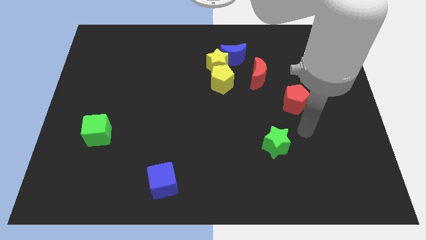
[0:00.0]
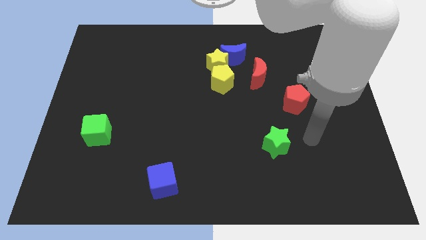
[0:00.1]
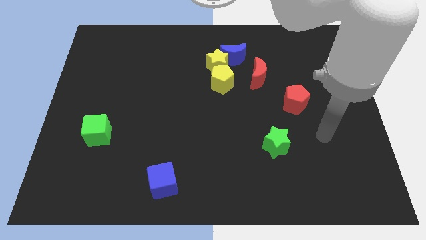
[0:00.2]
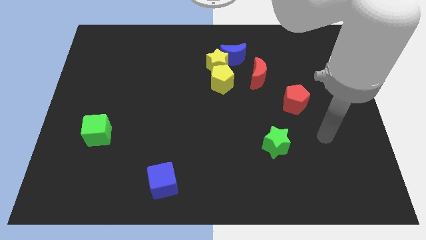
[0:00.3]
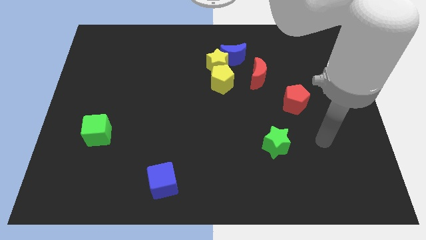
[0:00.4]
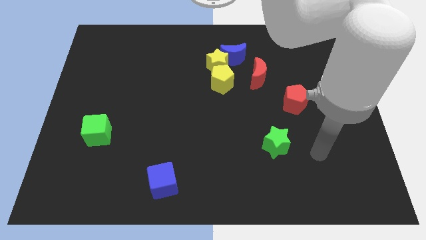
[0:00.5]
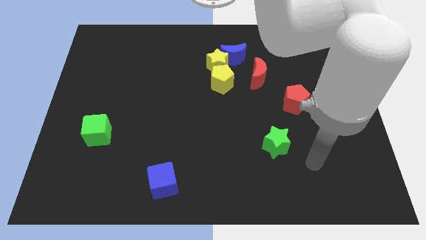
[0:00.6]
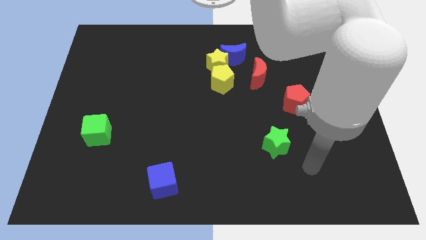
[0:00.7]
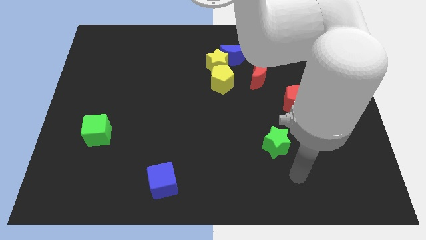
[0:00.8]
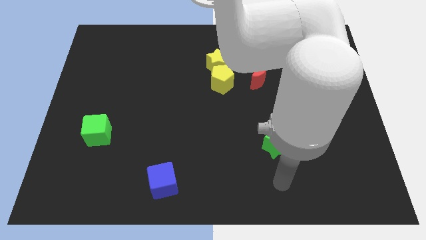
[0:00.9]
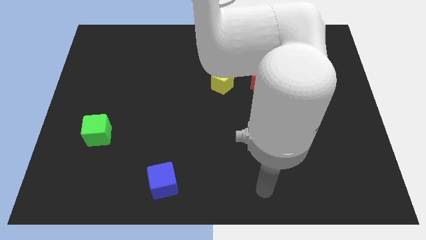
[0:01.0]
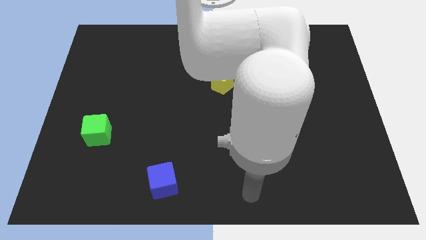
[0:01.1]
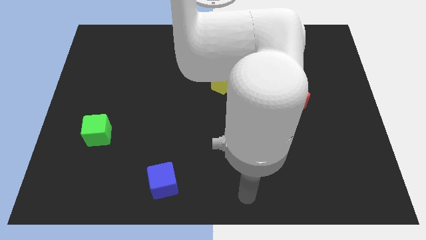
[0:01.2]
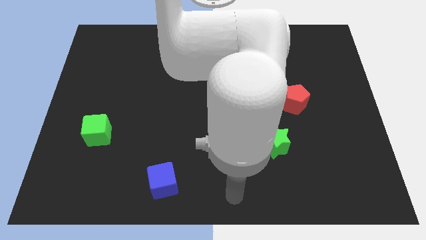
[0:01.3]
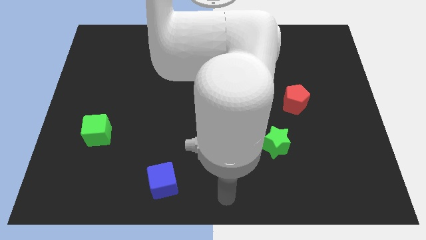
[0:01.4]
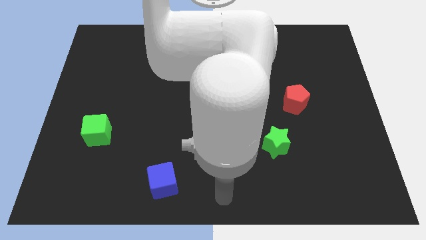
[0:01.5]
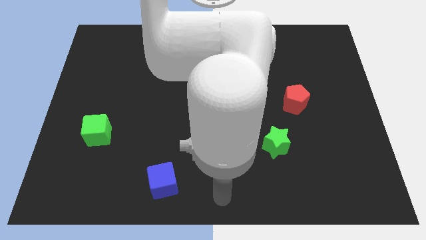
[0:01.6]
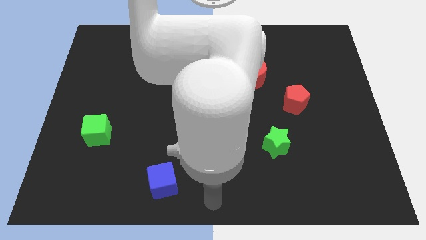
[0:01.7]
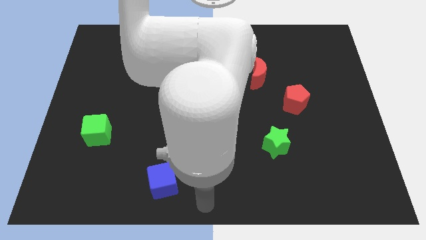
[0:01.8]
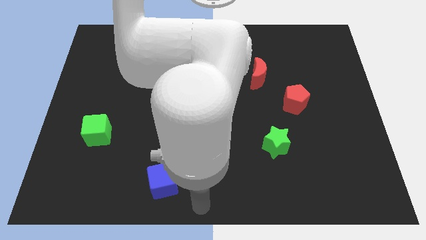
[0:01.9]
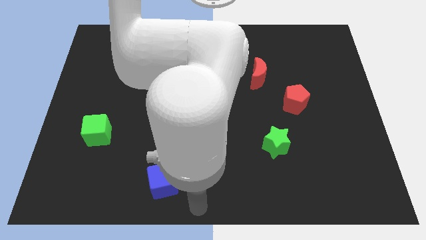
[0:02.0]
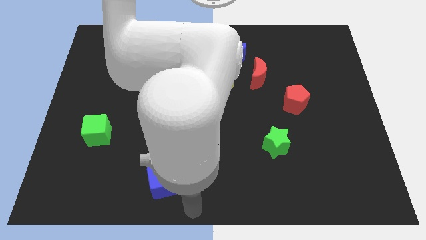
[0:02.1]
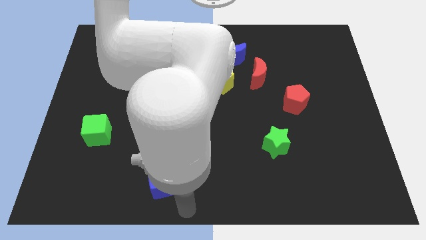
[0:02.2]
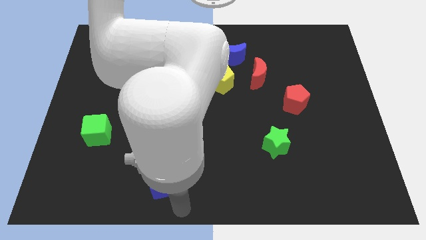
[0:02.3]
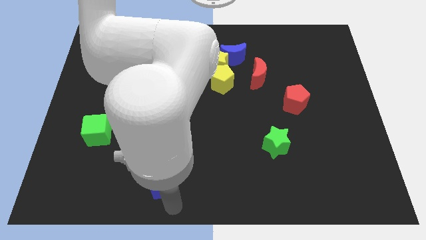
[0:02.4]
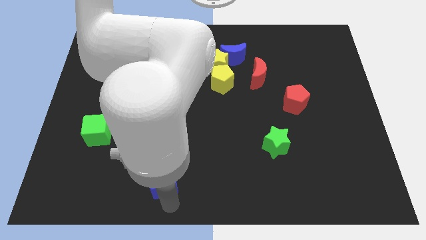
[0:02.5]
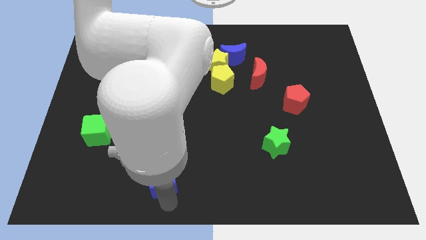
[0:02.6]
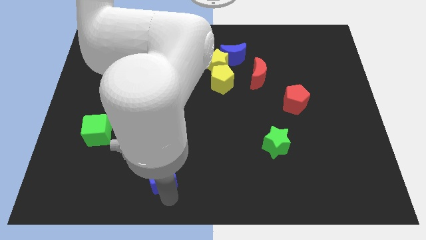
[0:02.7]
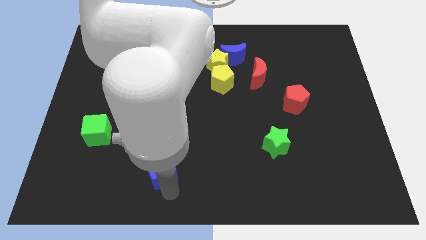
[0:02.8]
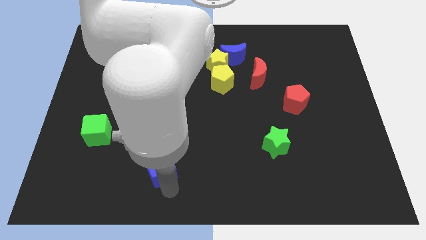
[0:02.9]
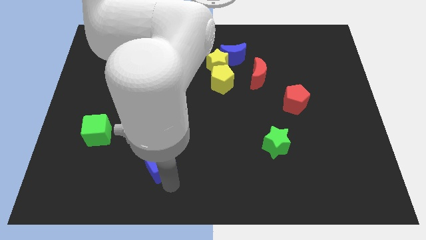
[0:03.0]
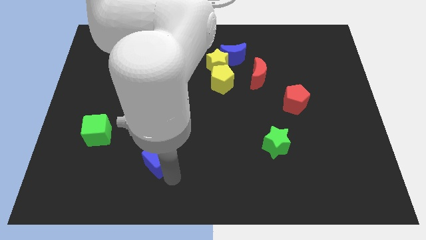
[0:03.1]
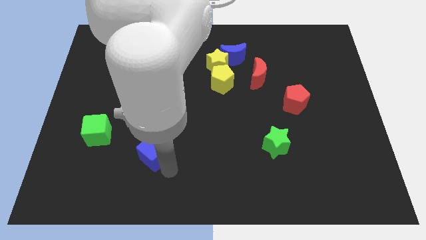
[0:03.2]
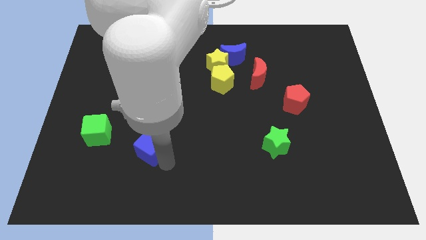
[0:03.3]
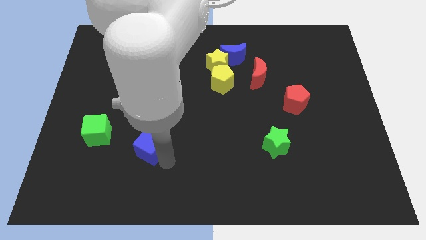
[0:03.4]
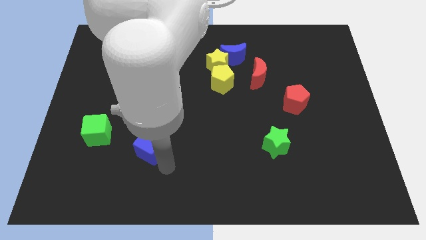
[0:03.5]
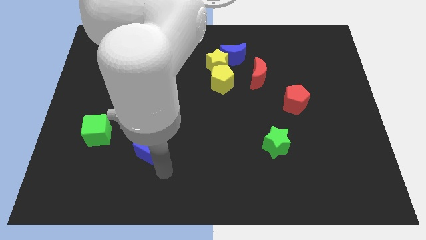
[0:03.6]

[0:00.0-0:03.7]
move the blue cube slightly up

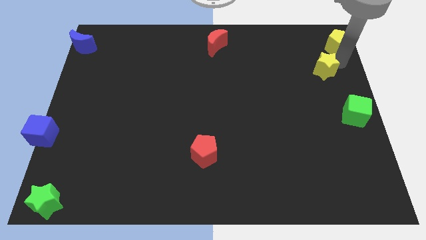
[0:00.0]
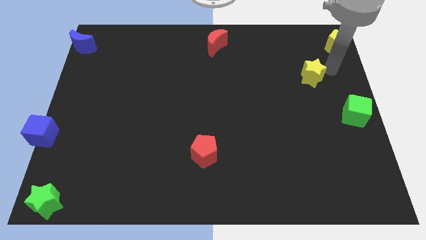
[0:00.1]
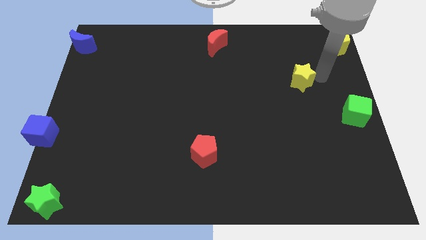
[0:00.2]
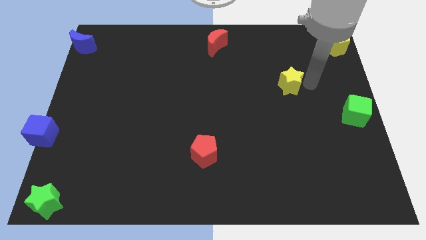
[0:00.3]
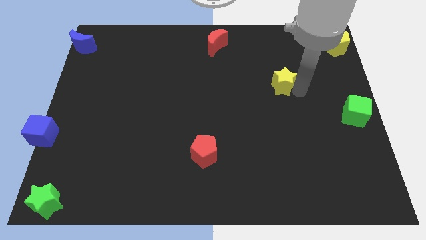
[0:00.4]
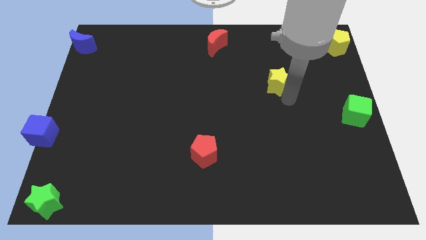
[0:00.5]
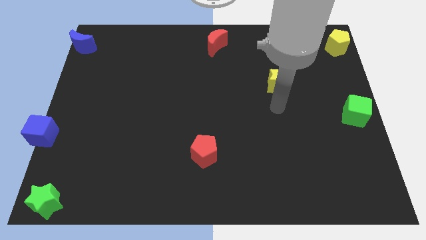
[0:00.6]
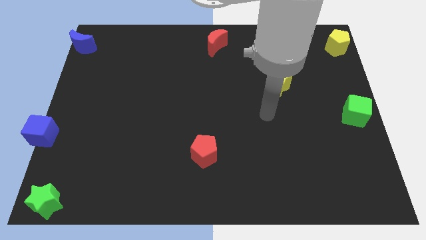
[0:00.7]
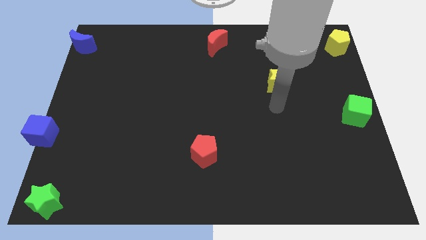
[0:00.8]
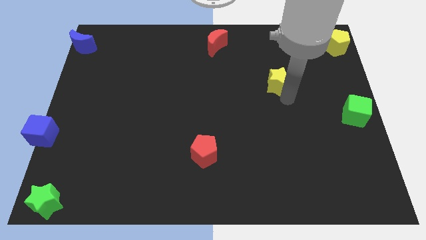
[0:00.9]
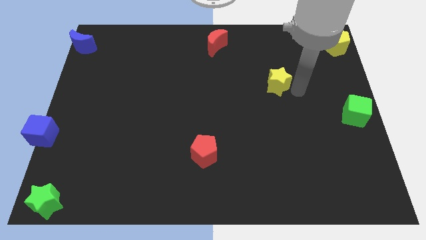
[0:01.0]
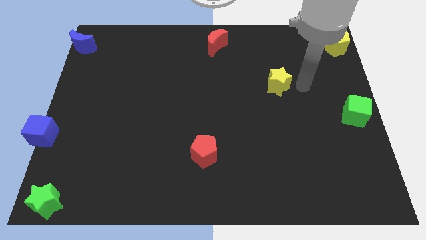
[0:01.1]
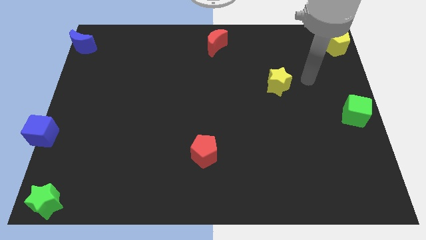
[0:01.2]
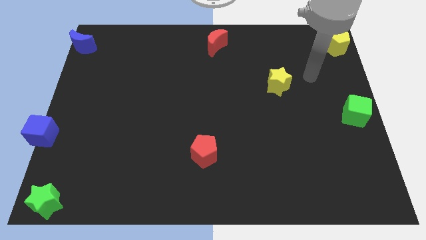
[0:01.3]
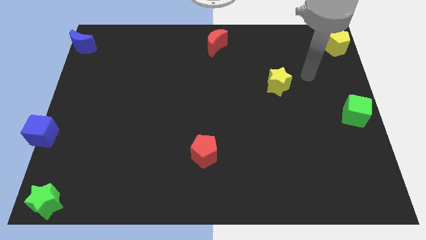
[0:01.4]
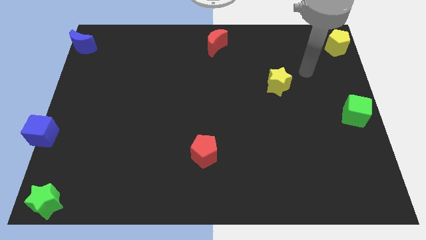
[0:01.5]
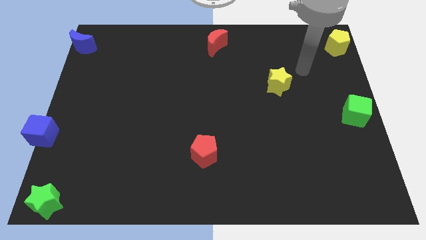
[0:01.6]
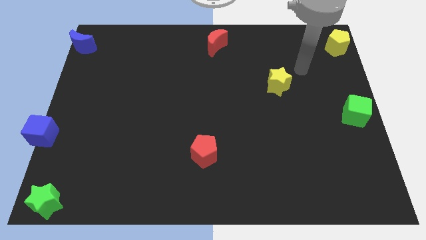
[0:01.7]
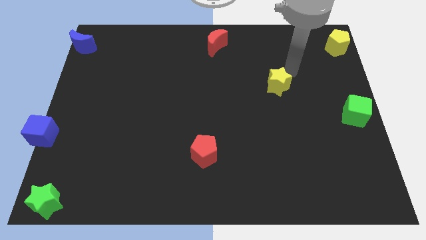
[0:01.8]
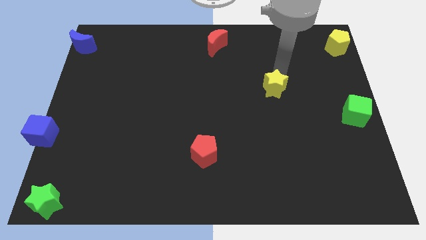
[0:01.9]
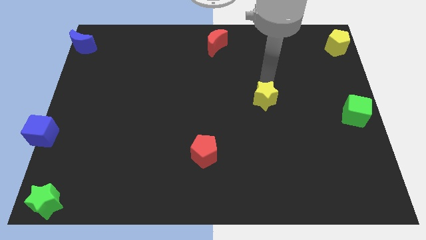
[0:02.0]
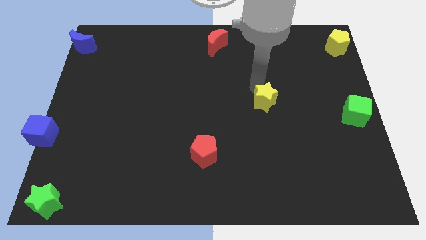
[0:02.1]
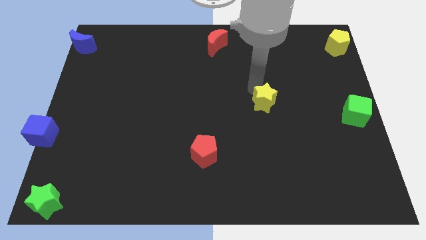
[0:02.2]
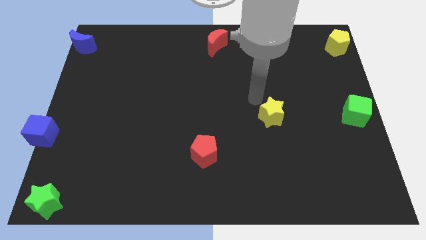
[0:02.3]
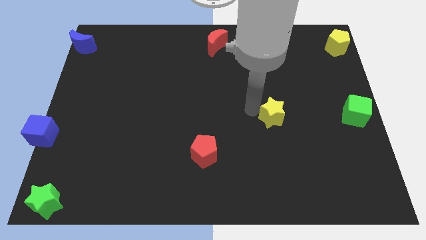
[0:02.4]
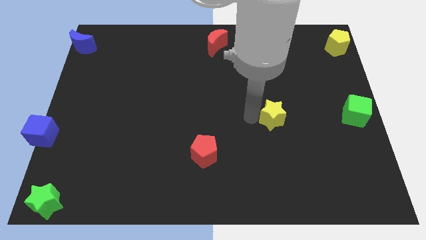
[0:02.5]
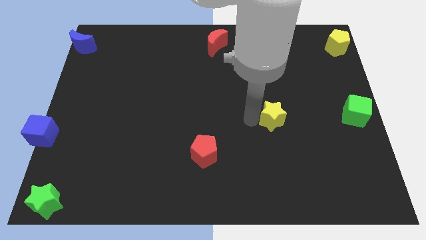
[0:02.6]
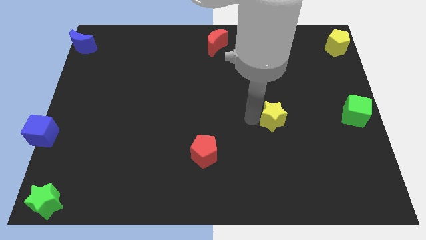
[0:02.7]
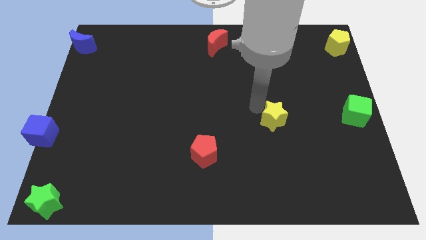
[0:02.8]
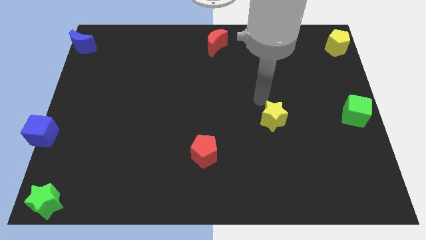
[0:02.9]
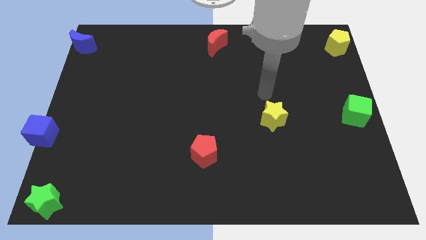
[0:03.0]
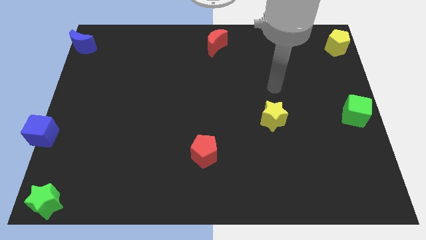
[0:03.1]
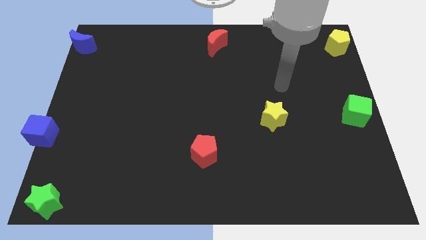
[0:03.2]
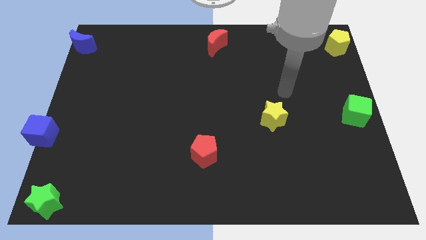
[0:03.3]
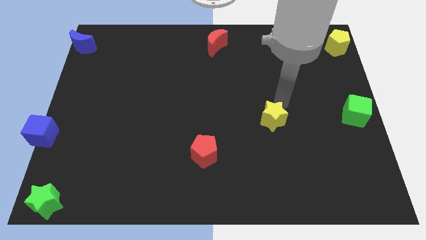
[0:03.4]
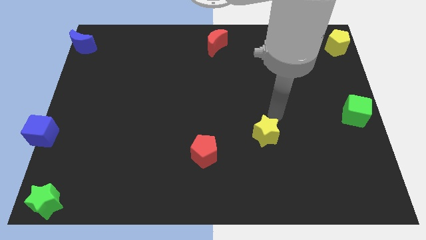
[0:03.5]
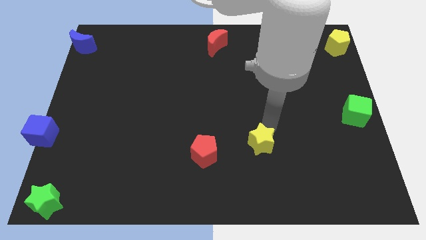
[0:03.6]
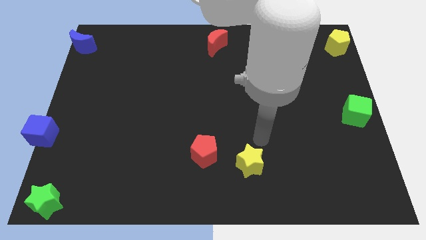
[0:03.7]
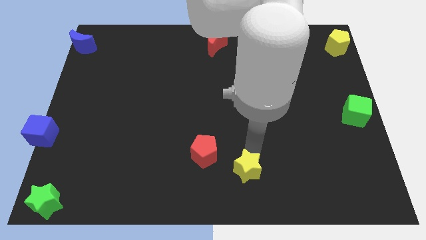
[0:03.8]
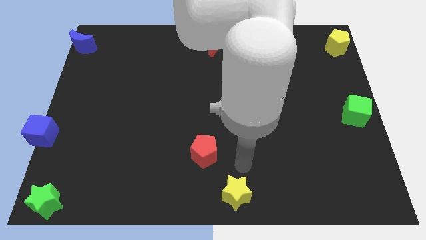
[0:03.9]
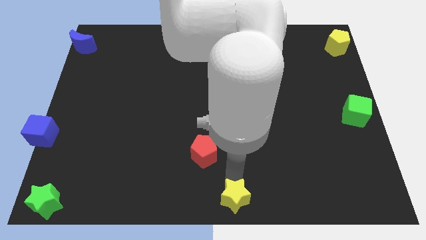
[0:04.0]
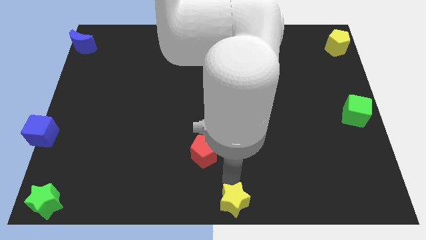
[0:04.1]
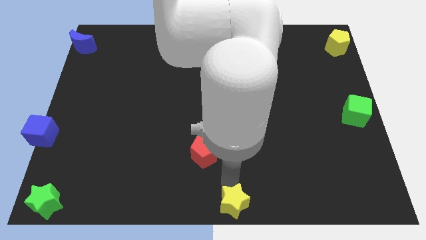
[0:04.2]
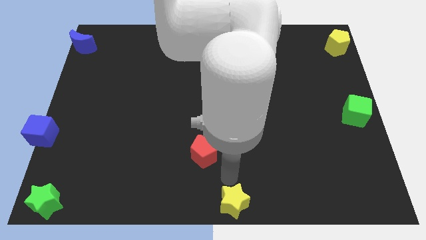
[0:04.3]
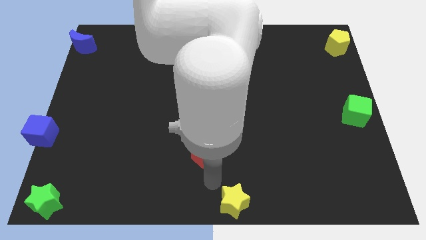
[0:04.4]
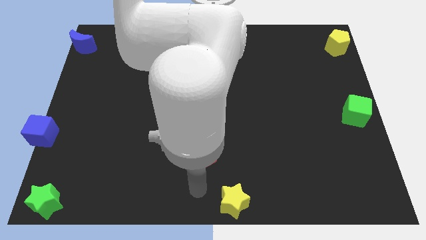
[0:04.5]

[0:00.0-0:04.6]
move the yellow star to the bottom center of the board

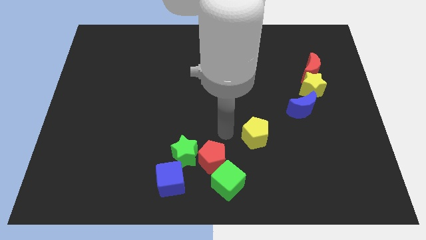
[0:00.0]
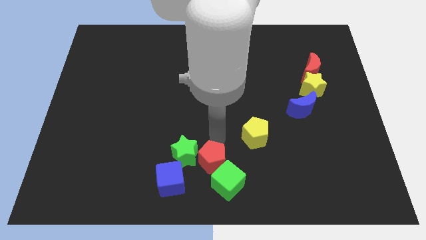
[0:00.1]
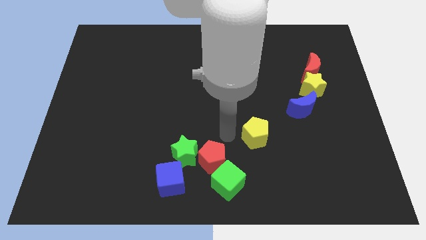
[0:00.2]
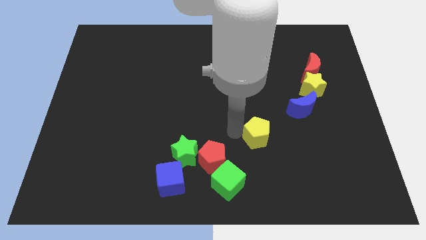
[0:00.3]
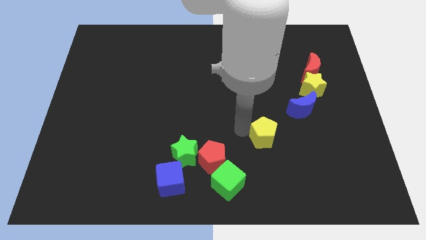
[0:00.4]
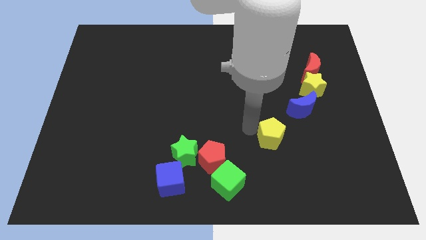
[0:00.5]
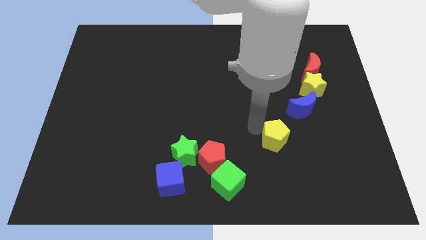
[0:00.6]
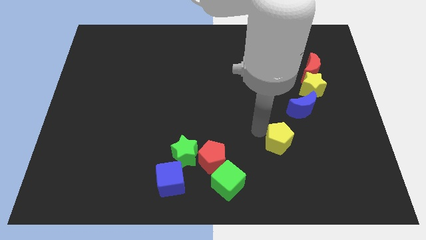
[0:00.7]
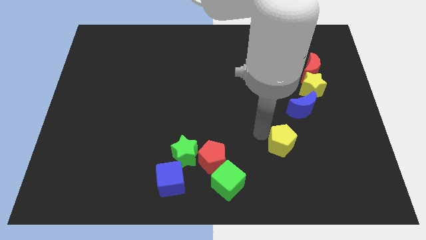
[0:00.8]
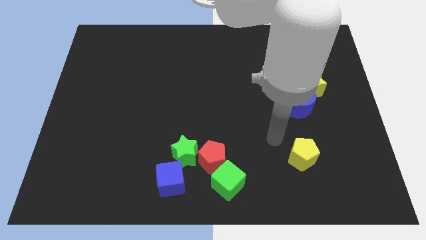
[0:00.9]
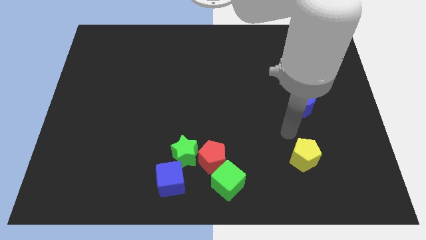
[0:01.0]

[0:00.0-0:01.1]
push the yellow pentagon below the blue moon
